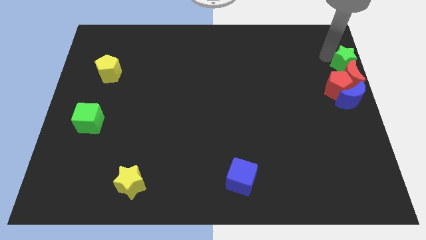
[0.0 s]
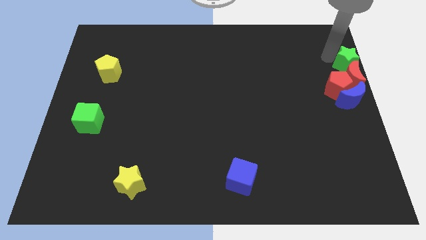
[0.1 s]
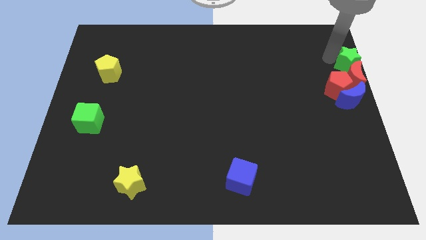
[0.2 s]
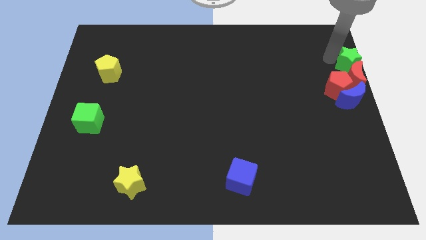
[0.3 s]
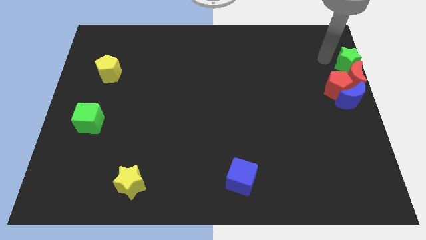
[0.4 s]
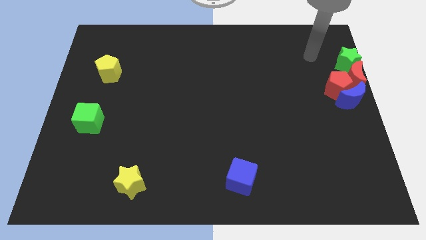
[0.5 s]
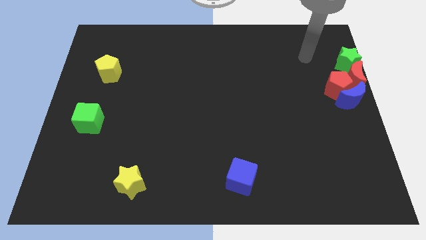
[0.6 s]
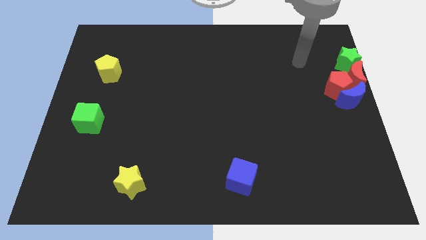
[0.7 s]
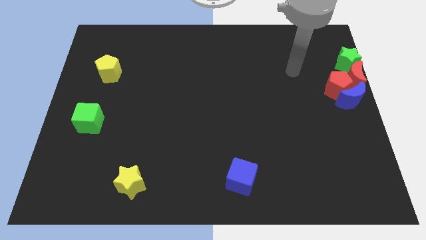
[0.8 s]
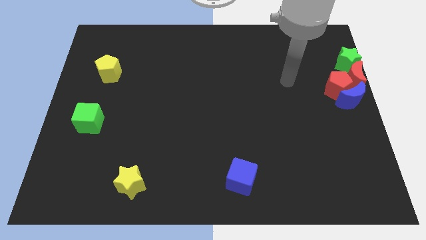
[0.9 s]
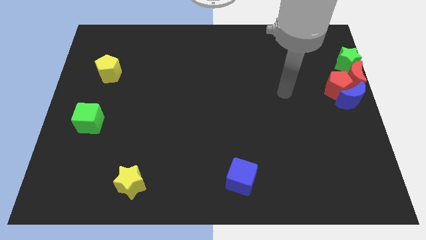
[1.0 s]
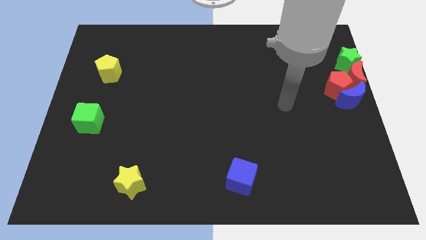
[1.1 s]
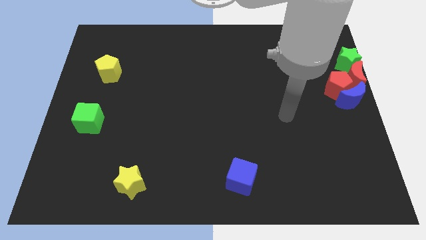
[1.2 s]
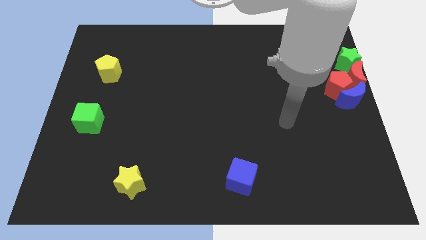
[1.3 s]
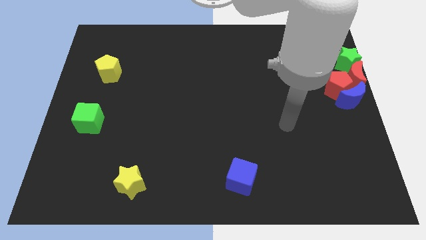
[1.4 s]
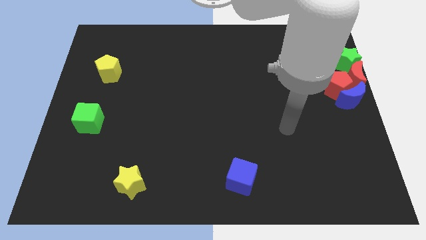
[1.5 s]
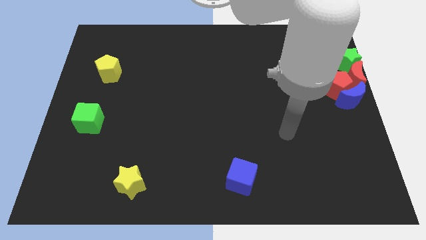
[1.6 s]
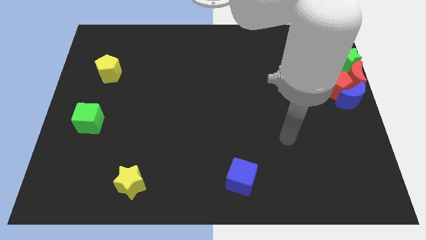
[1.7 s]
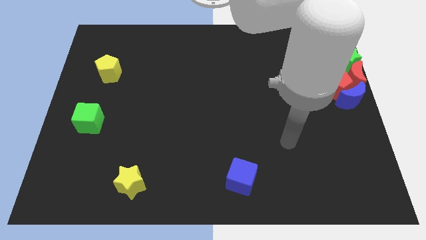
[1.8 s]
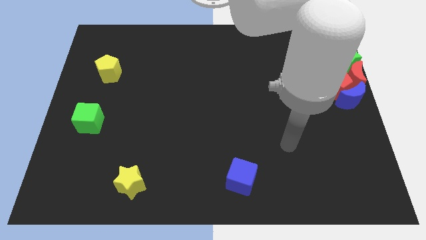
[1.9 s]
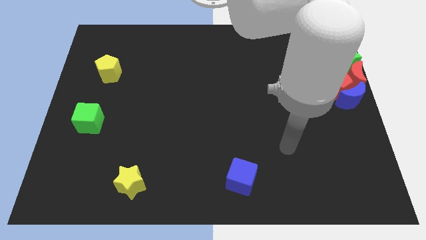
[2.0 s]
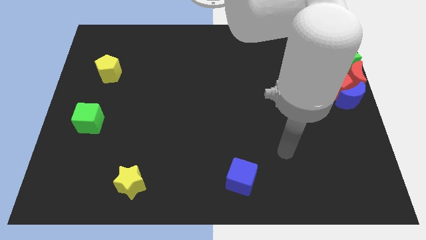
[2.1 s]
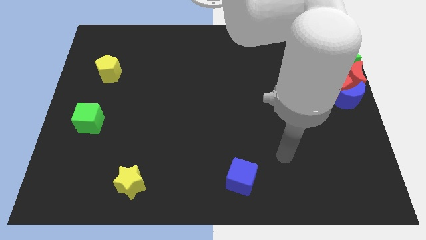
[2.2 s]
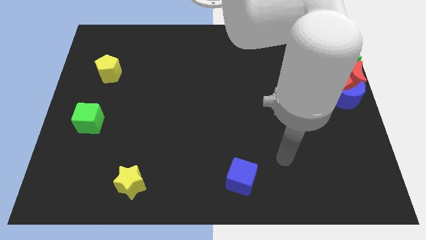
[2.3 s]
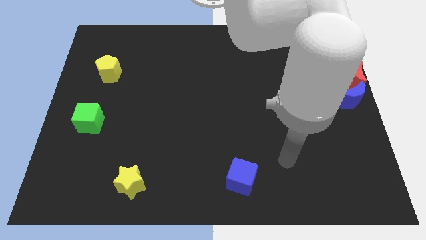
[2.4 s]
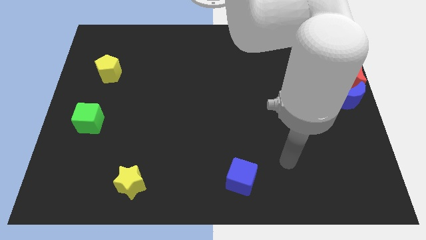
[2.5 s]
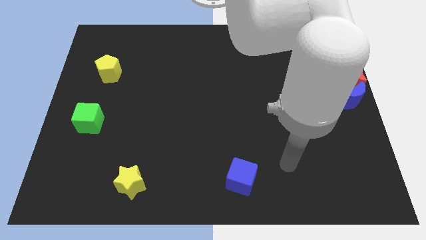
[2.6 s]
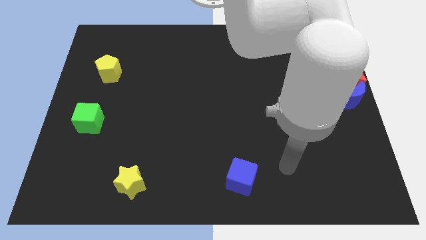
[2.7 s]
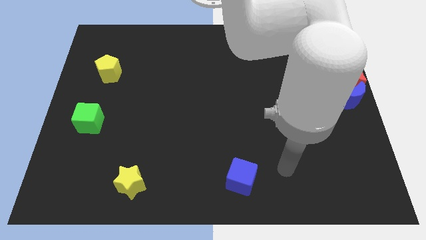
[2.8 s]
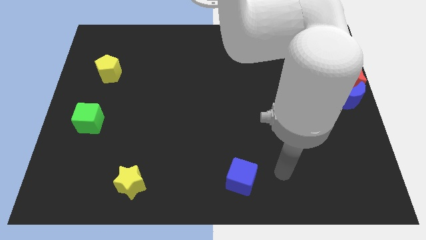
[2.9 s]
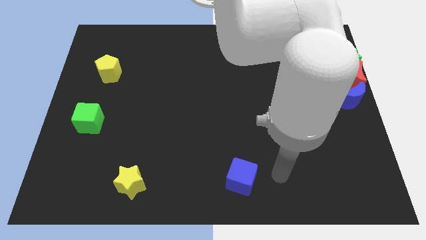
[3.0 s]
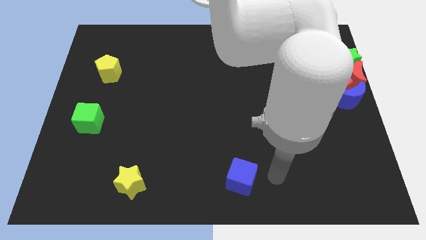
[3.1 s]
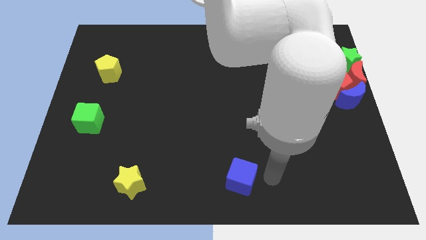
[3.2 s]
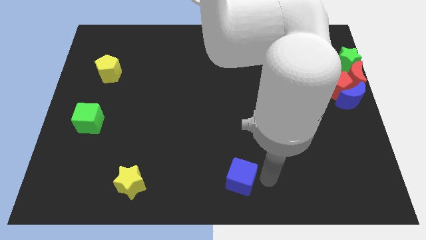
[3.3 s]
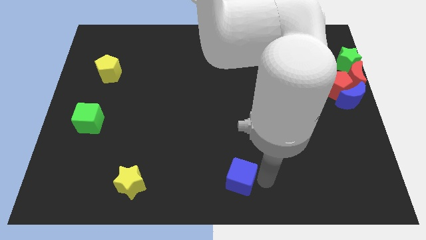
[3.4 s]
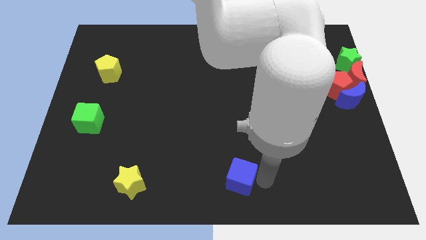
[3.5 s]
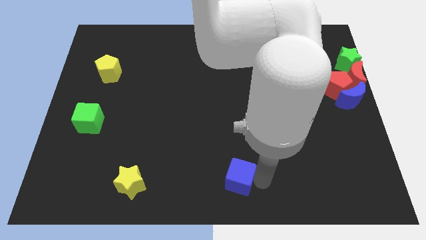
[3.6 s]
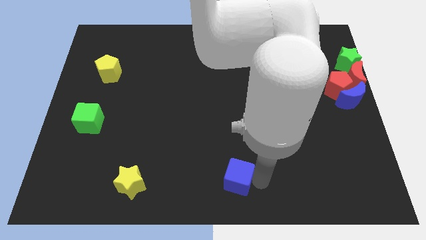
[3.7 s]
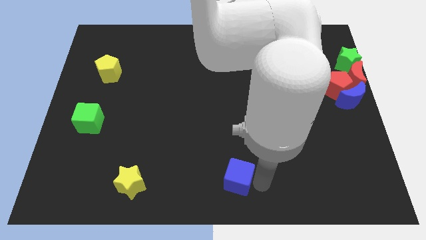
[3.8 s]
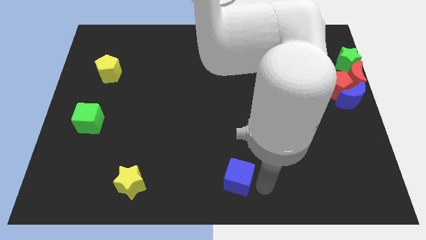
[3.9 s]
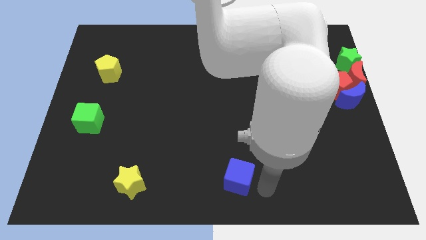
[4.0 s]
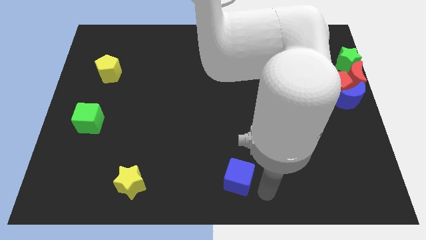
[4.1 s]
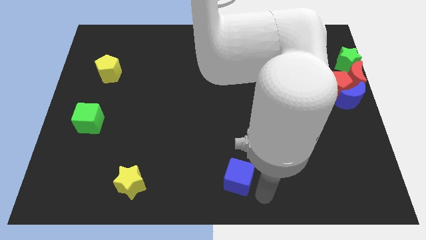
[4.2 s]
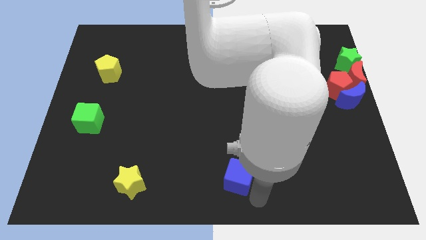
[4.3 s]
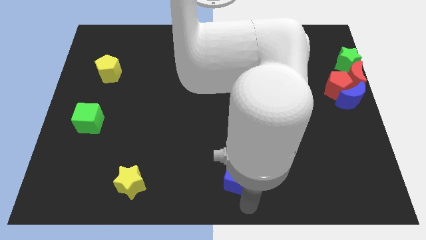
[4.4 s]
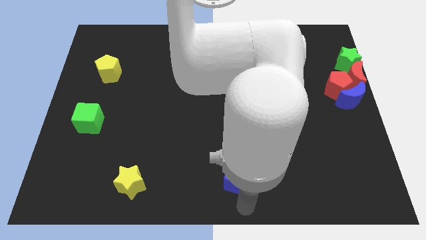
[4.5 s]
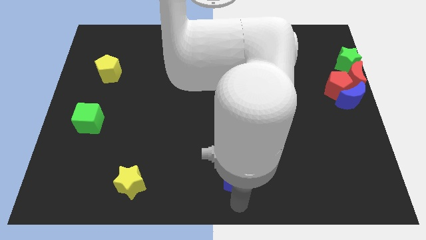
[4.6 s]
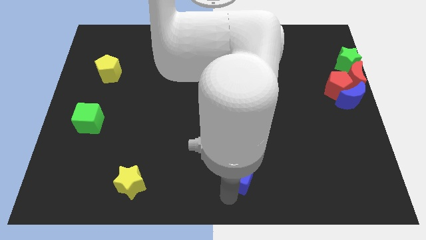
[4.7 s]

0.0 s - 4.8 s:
move your arm to the blue cube

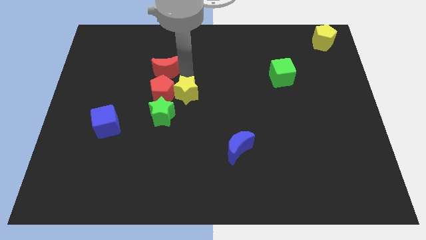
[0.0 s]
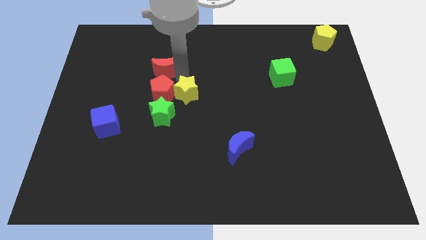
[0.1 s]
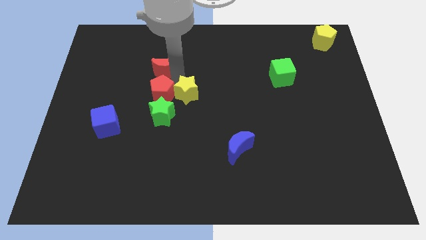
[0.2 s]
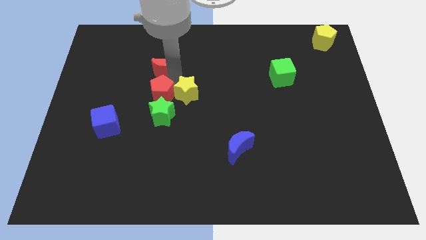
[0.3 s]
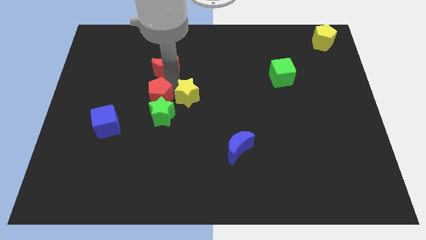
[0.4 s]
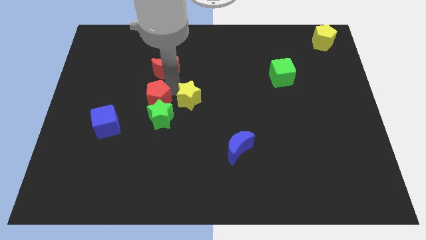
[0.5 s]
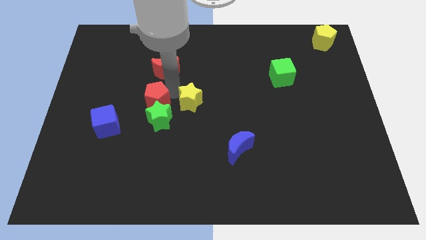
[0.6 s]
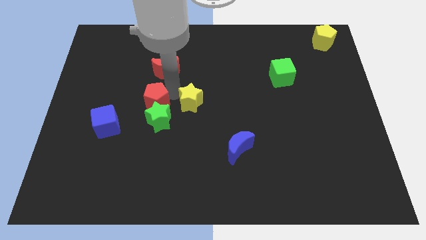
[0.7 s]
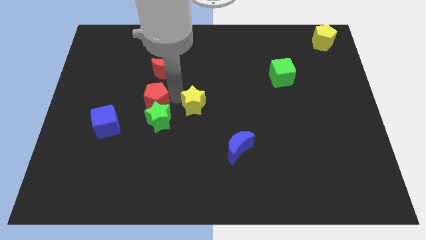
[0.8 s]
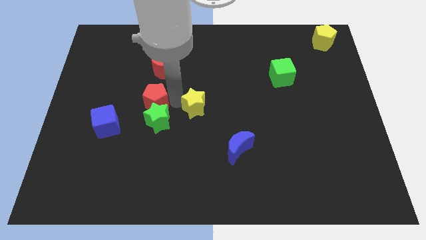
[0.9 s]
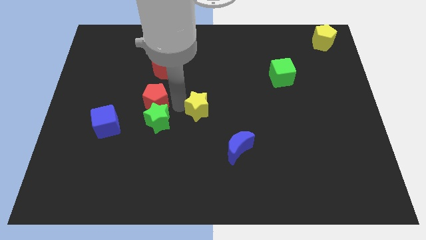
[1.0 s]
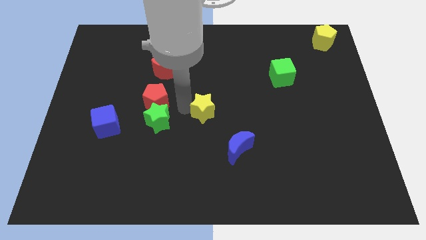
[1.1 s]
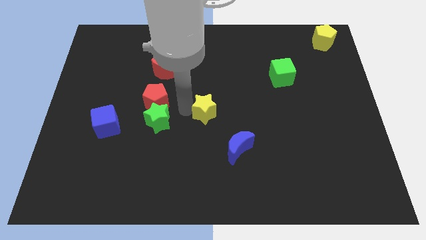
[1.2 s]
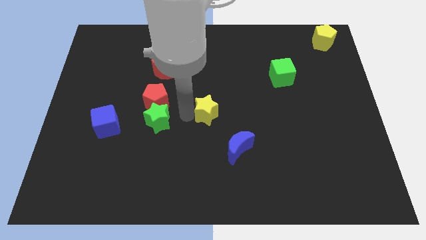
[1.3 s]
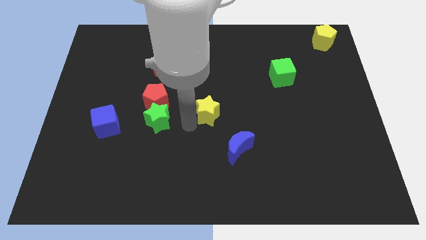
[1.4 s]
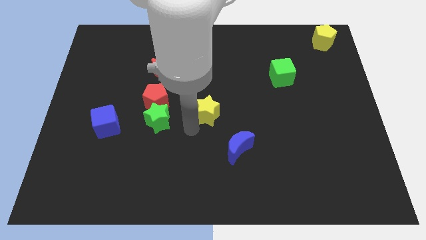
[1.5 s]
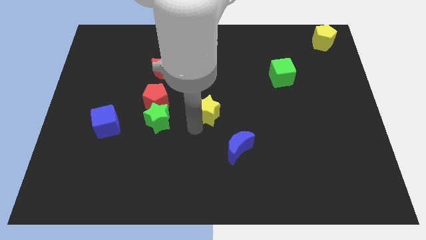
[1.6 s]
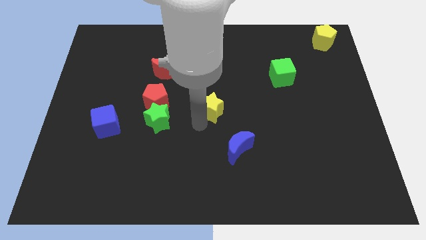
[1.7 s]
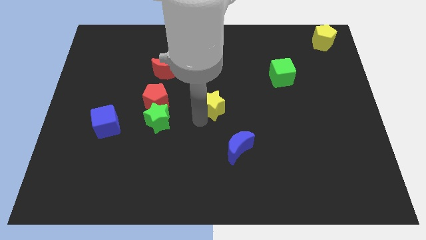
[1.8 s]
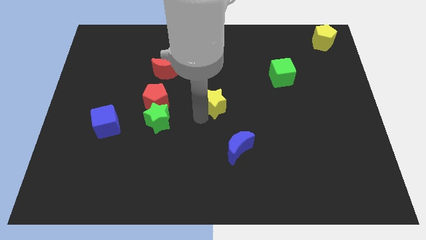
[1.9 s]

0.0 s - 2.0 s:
separate yellow star from the red pentagon

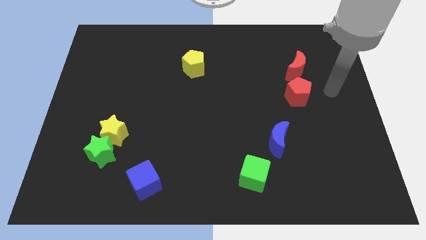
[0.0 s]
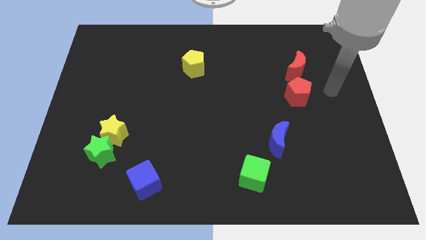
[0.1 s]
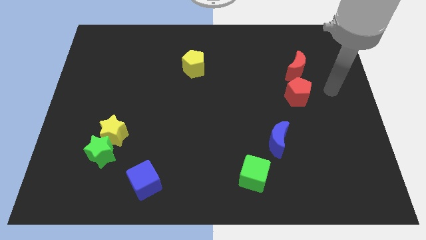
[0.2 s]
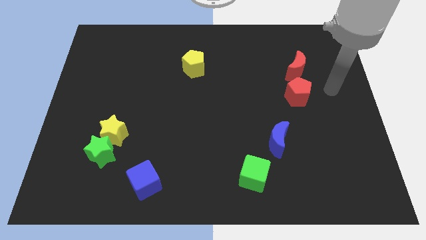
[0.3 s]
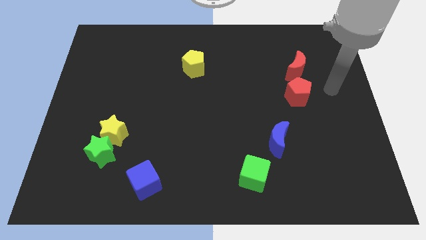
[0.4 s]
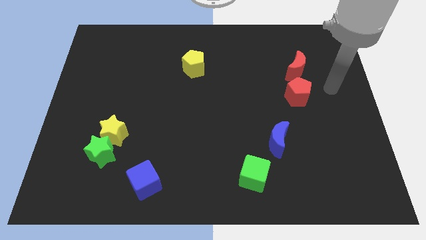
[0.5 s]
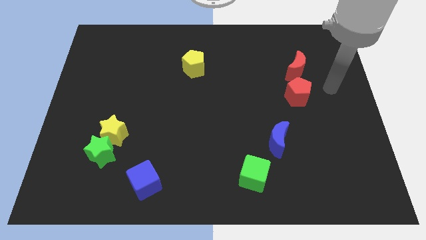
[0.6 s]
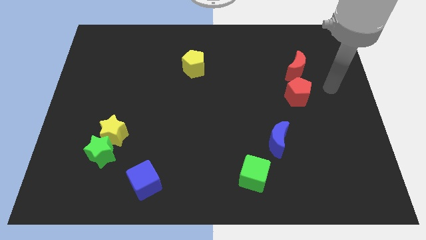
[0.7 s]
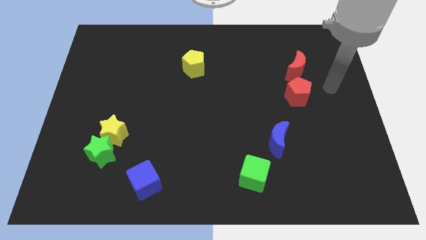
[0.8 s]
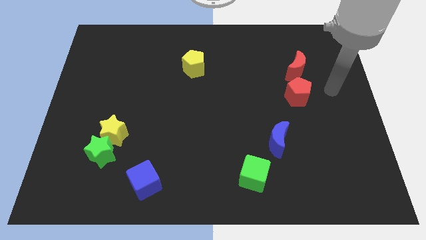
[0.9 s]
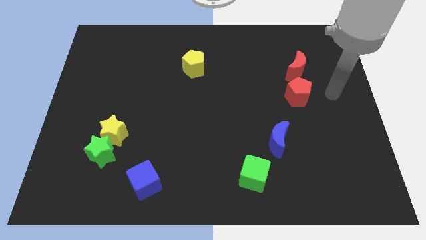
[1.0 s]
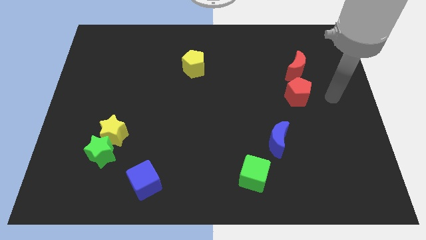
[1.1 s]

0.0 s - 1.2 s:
move your arm to the right of the red pentagon

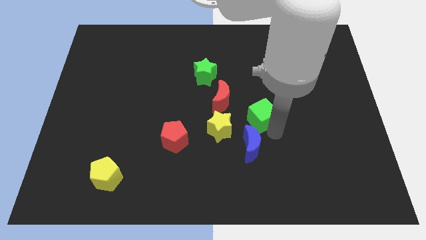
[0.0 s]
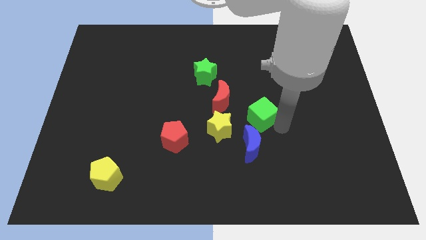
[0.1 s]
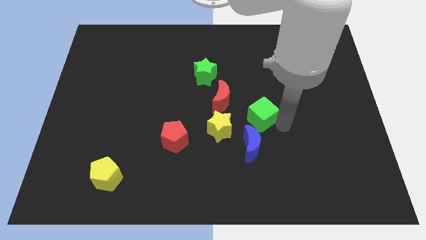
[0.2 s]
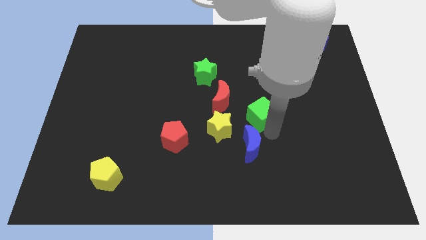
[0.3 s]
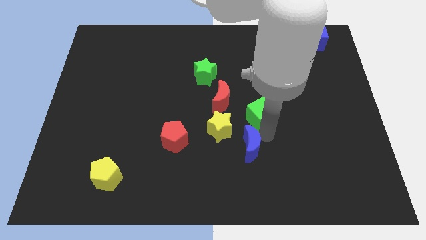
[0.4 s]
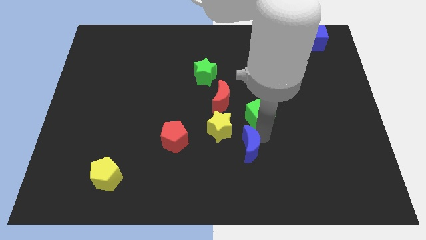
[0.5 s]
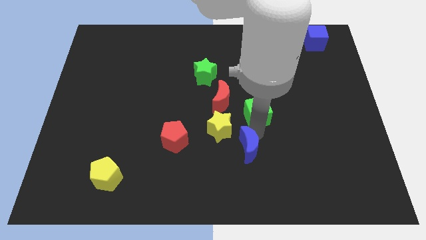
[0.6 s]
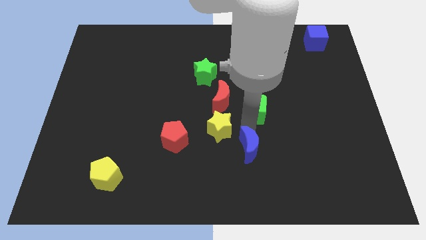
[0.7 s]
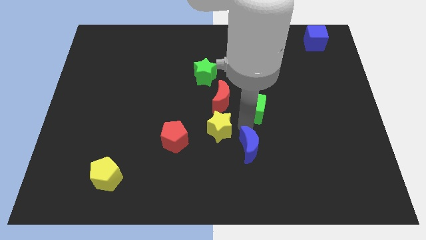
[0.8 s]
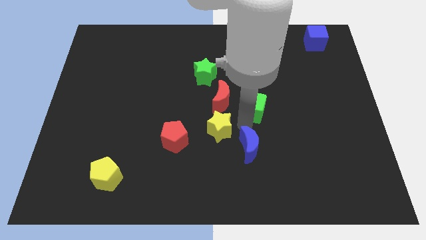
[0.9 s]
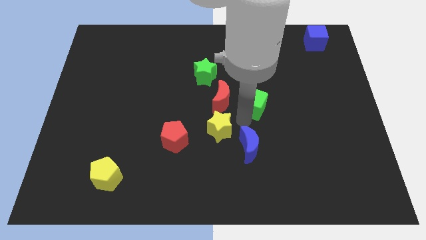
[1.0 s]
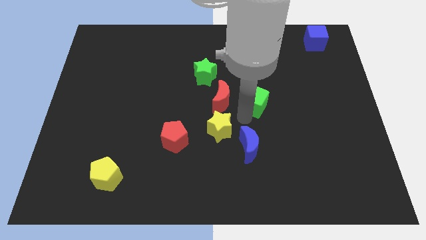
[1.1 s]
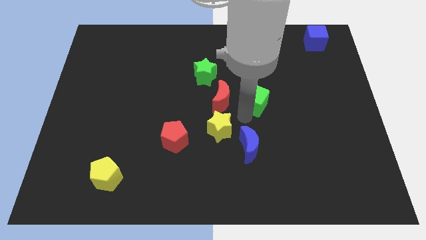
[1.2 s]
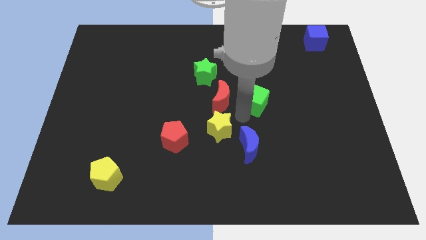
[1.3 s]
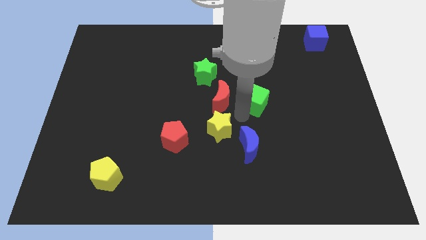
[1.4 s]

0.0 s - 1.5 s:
separate the green cube from the blue crescent
